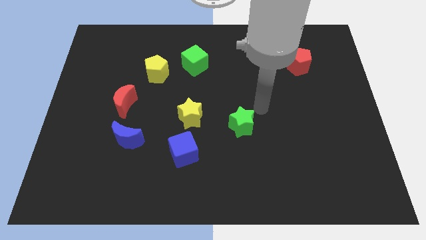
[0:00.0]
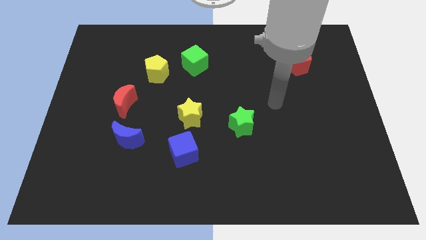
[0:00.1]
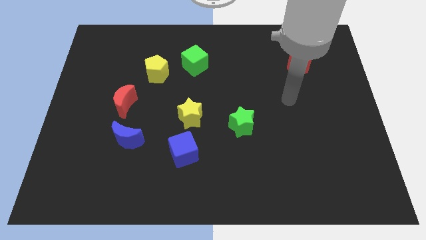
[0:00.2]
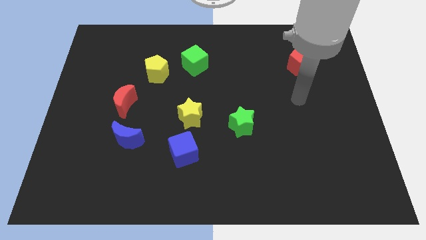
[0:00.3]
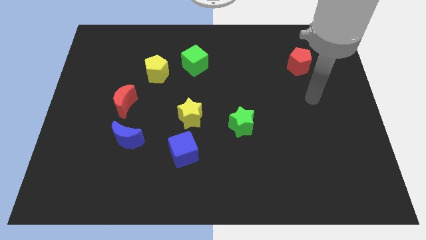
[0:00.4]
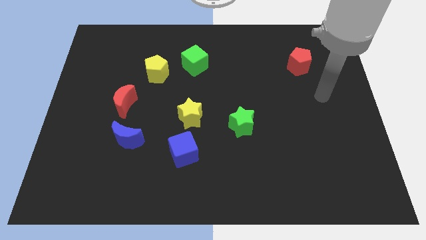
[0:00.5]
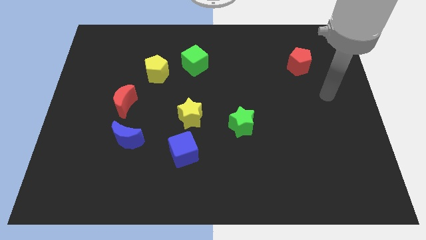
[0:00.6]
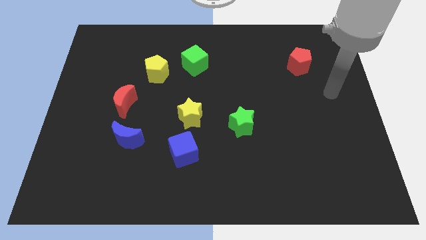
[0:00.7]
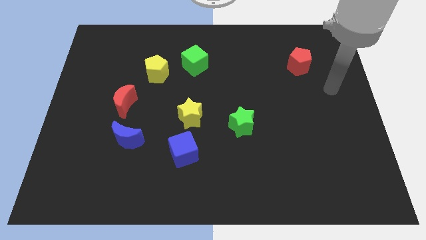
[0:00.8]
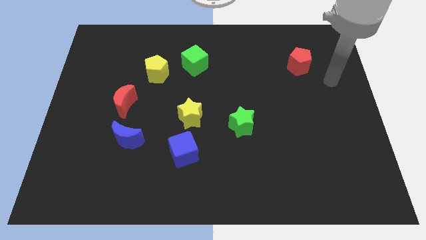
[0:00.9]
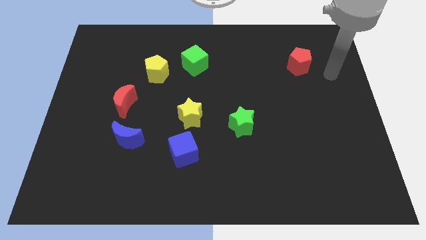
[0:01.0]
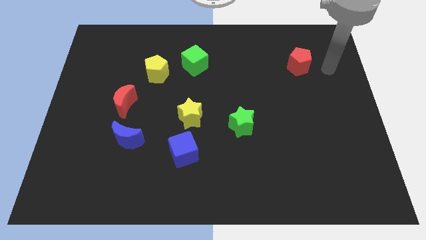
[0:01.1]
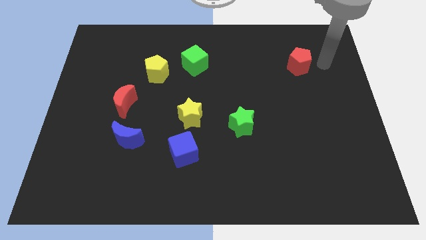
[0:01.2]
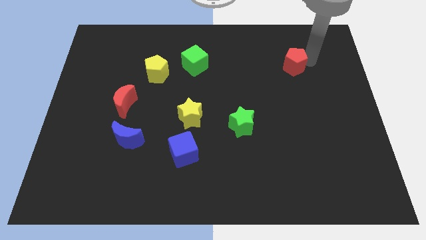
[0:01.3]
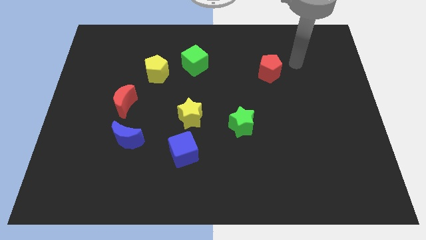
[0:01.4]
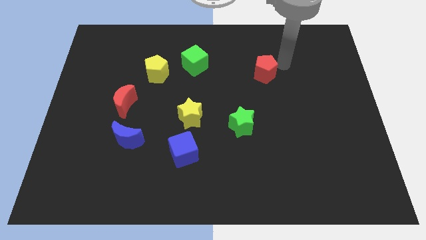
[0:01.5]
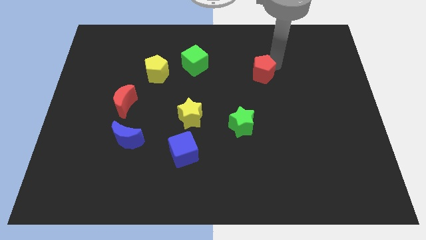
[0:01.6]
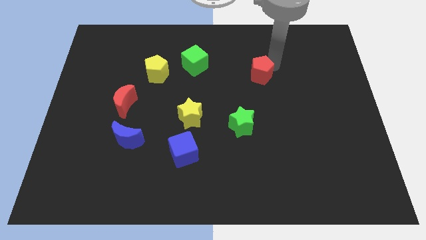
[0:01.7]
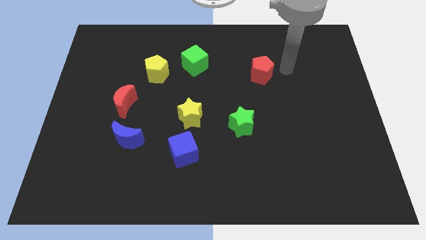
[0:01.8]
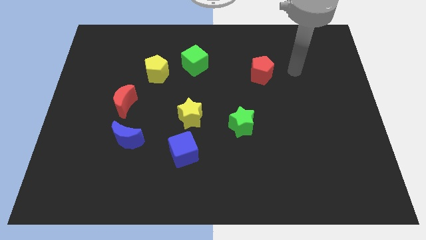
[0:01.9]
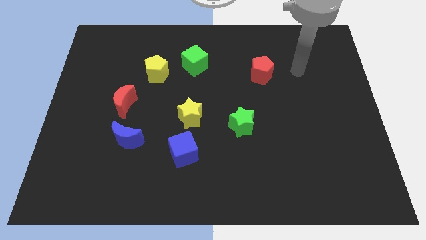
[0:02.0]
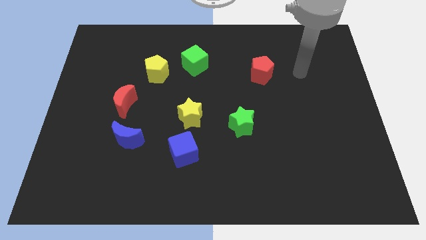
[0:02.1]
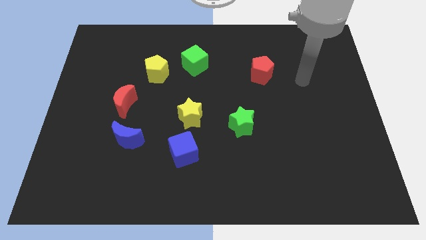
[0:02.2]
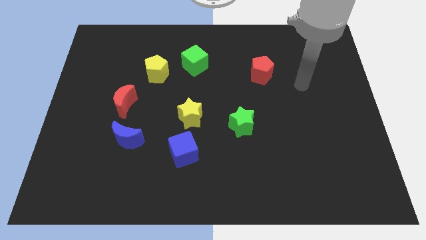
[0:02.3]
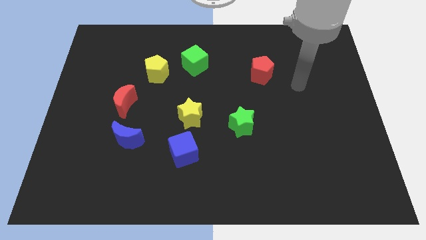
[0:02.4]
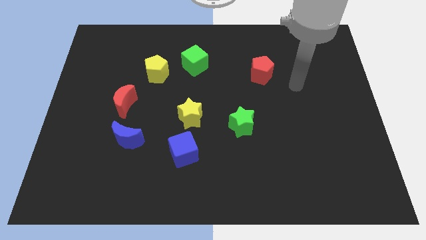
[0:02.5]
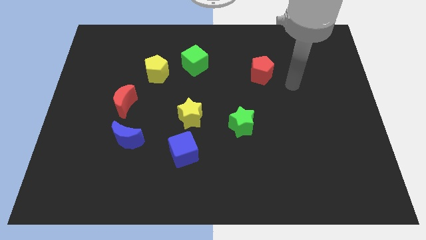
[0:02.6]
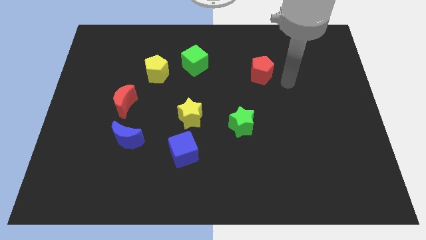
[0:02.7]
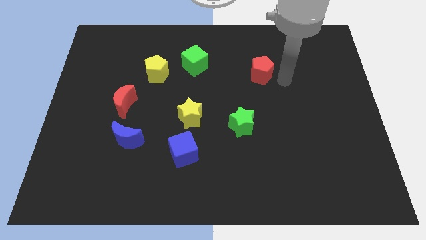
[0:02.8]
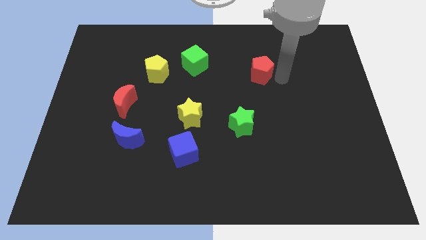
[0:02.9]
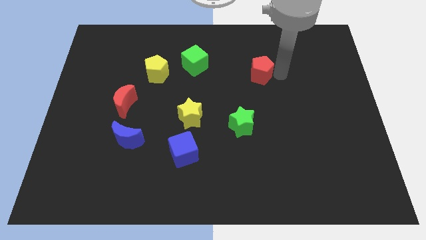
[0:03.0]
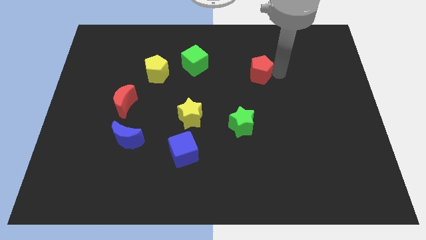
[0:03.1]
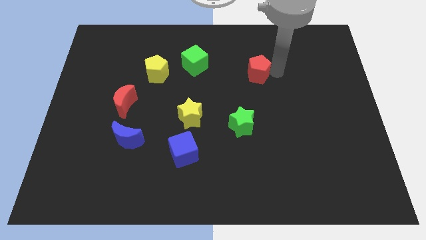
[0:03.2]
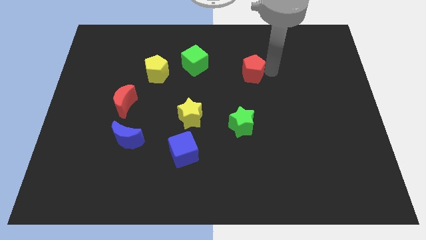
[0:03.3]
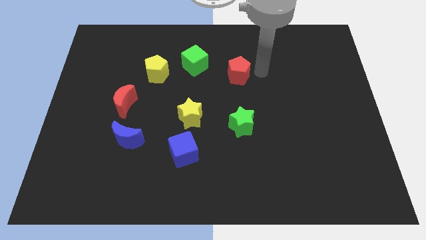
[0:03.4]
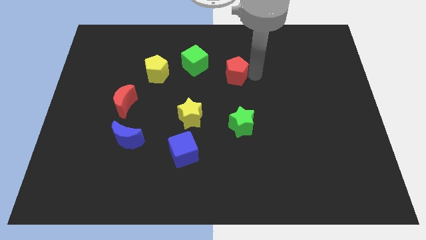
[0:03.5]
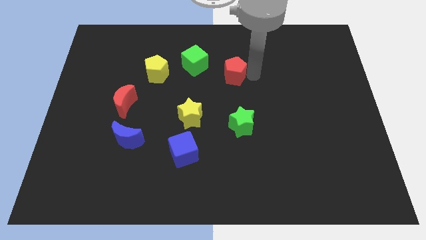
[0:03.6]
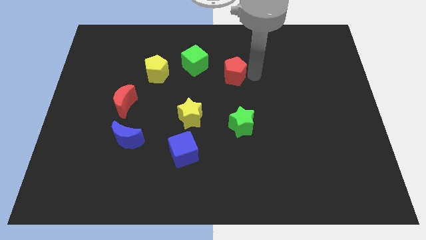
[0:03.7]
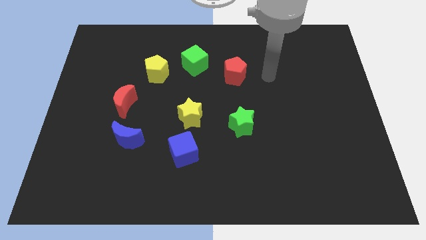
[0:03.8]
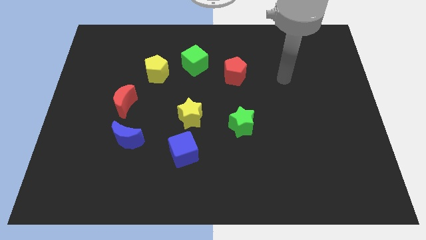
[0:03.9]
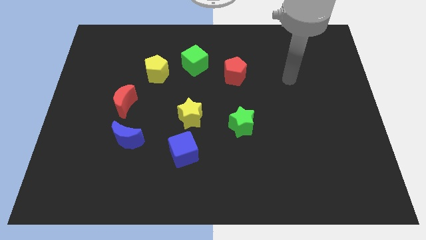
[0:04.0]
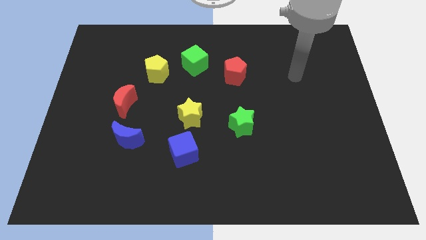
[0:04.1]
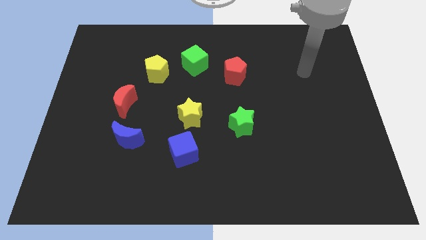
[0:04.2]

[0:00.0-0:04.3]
move the red pentagon towards the bottom of the green cube

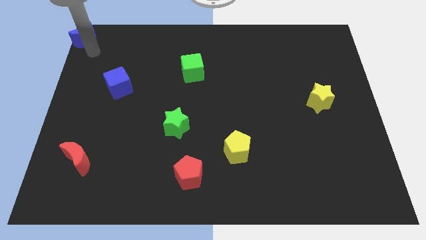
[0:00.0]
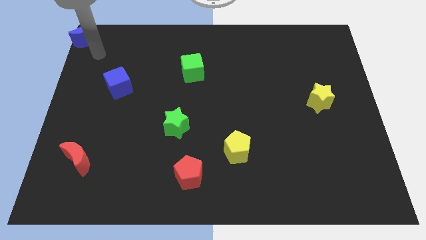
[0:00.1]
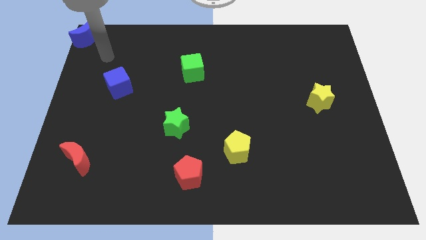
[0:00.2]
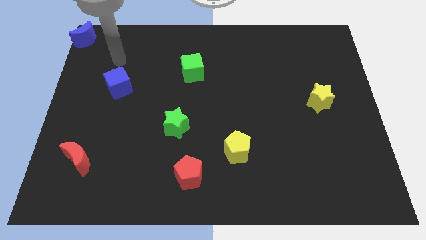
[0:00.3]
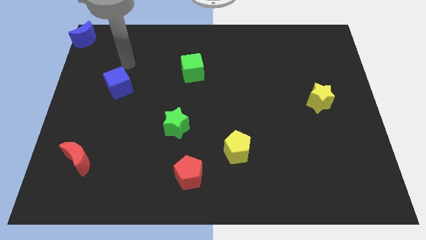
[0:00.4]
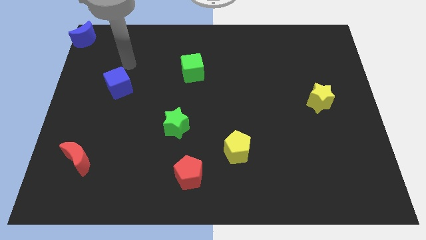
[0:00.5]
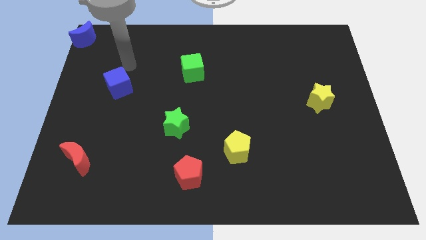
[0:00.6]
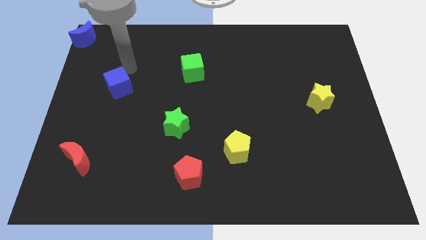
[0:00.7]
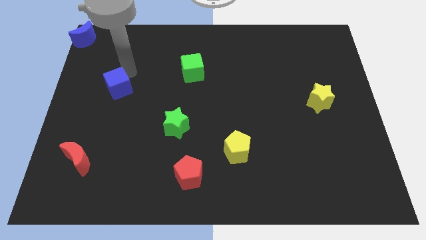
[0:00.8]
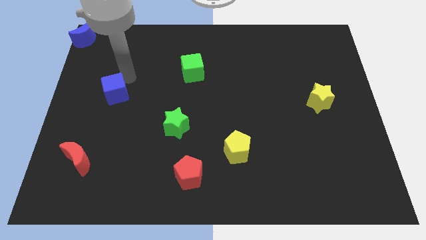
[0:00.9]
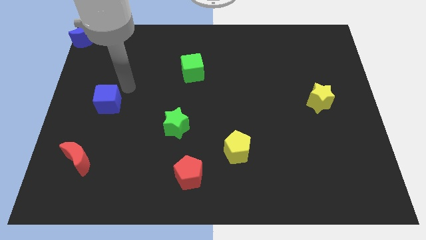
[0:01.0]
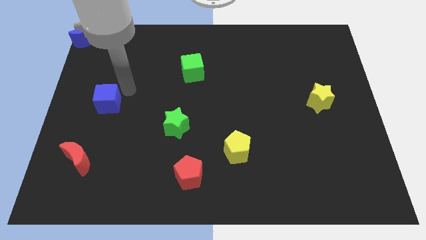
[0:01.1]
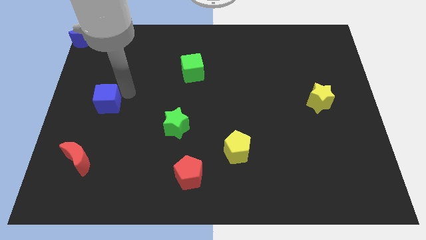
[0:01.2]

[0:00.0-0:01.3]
push blue cube towards its bottom

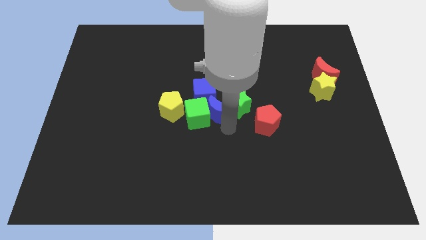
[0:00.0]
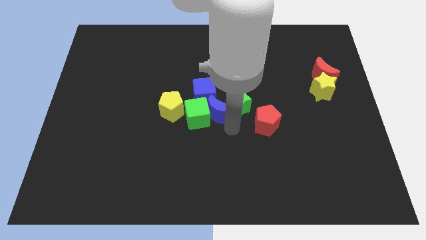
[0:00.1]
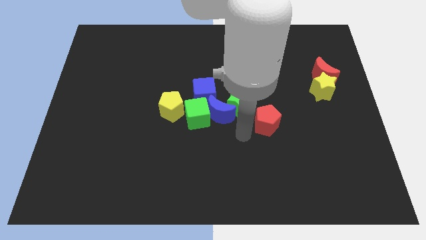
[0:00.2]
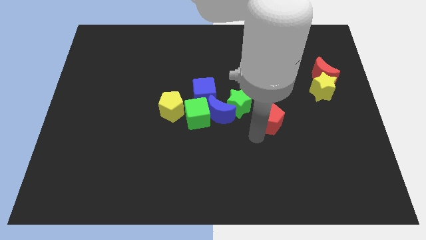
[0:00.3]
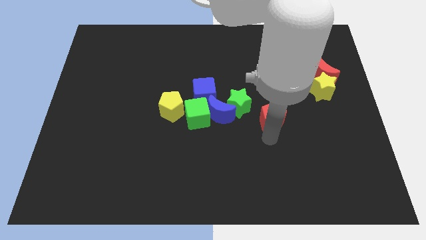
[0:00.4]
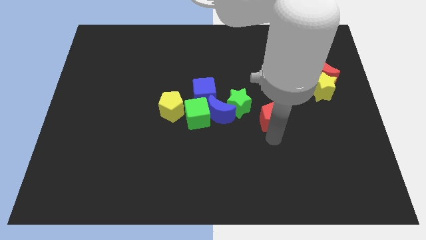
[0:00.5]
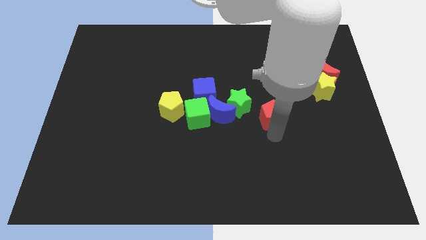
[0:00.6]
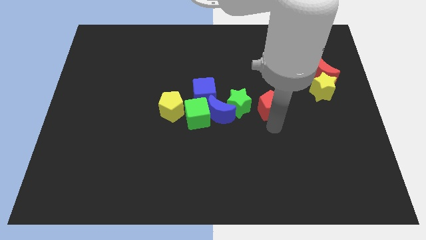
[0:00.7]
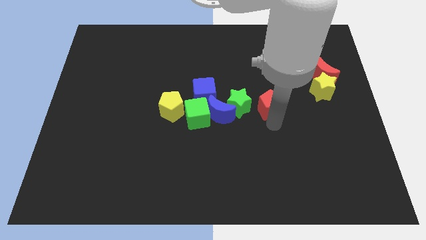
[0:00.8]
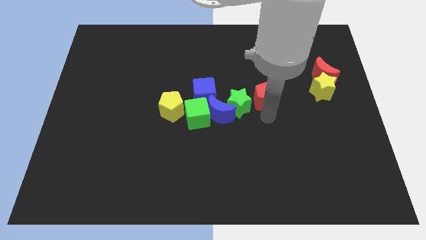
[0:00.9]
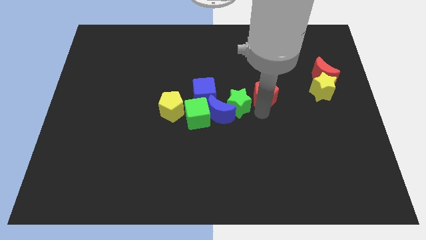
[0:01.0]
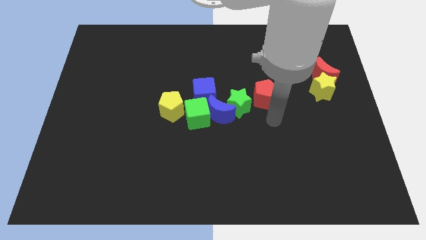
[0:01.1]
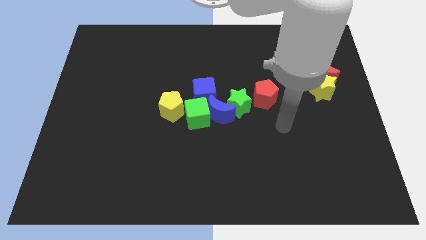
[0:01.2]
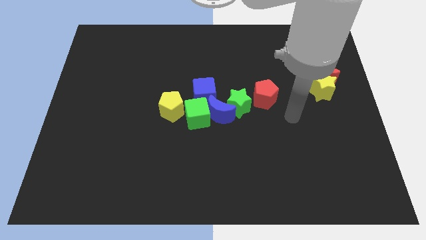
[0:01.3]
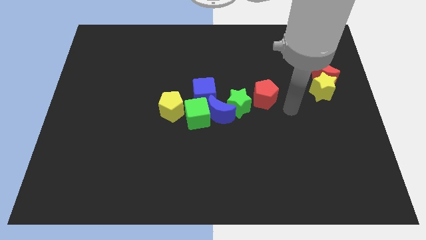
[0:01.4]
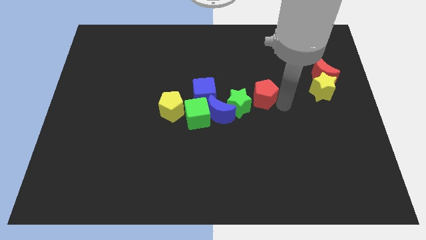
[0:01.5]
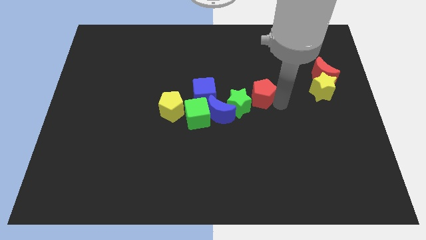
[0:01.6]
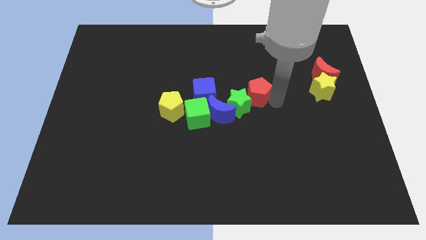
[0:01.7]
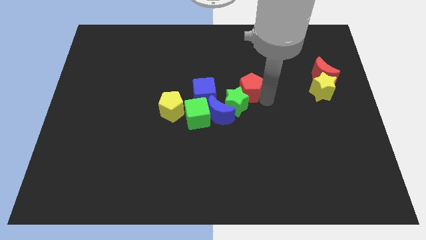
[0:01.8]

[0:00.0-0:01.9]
place the red pentagon at the top right of green star

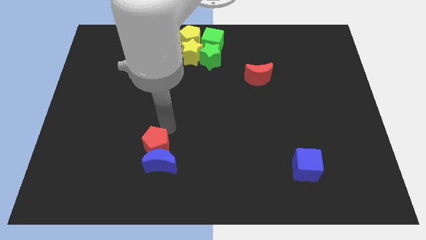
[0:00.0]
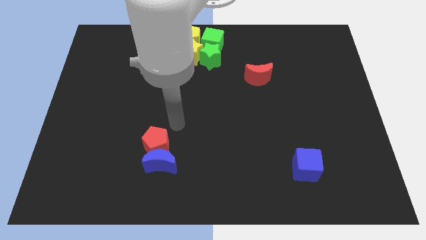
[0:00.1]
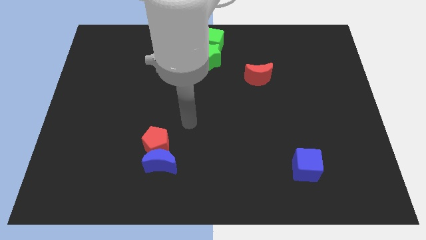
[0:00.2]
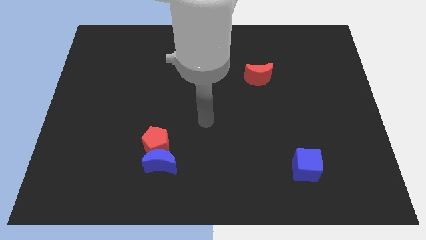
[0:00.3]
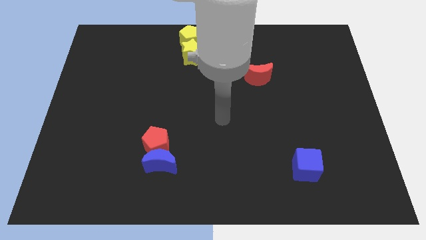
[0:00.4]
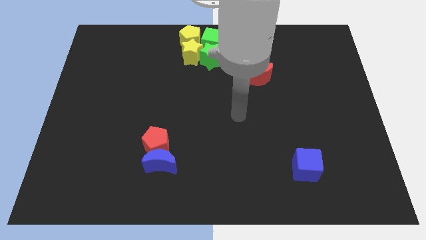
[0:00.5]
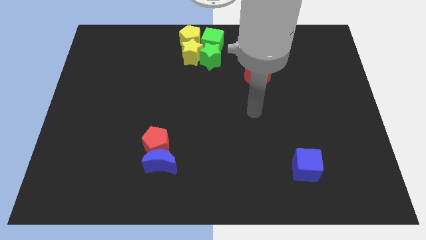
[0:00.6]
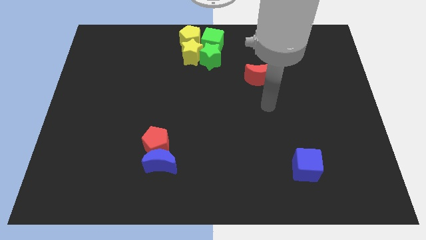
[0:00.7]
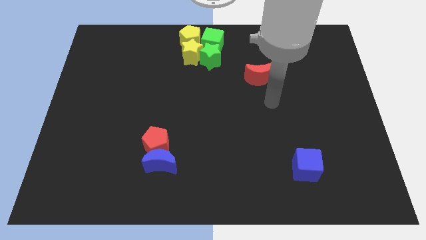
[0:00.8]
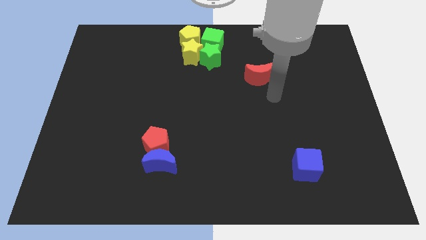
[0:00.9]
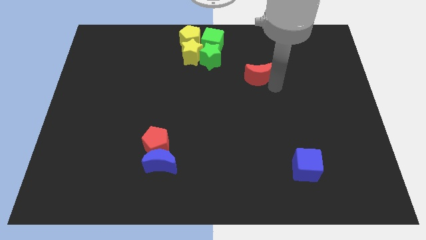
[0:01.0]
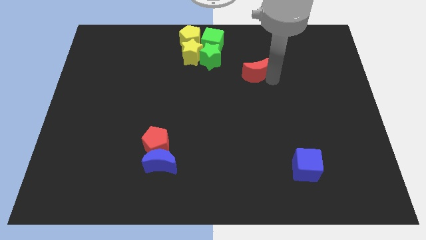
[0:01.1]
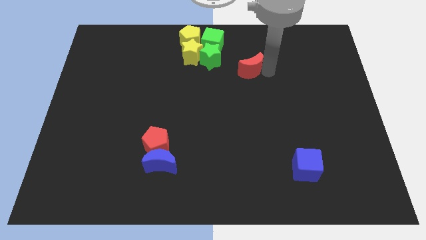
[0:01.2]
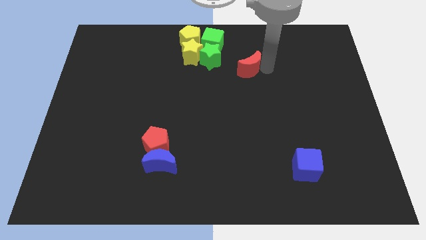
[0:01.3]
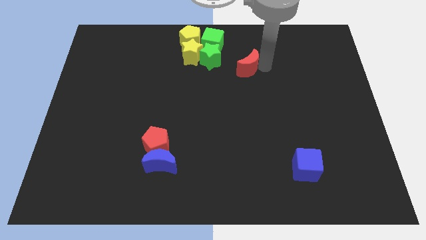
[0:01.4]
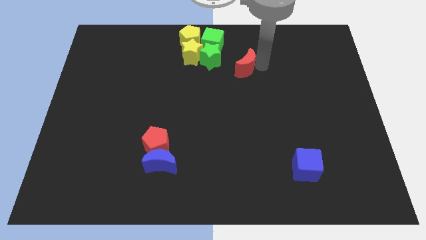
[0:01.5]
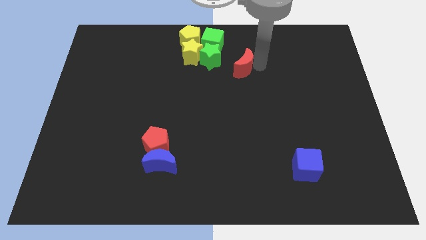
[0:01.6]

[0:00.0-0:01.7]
move the red moon towards the green star
